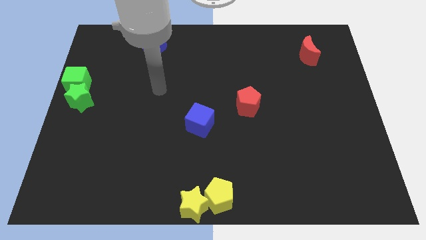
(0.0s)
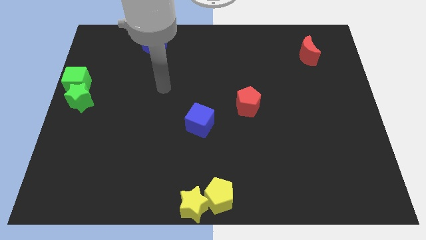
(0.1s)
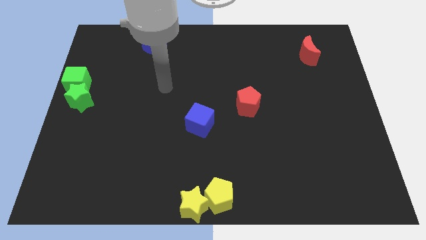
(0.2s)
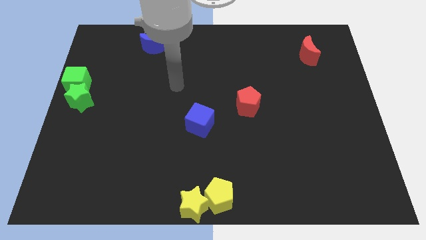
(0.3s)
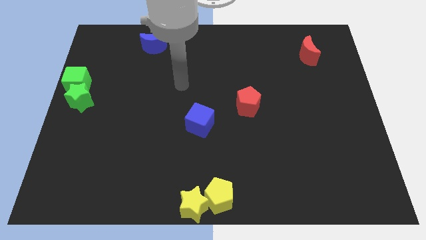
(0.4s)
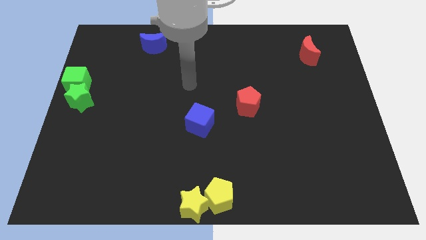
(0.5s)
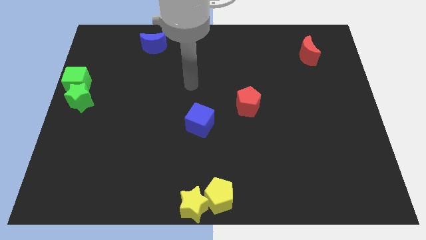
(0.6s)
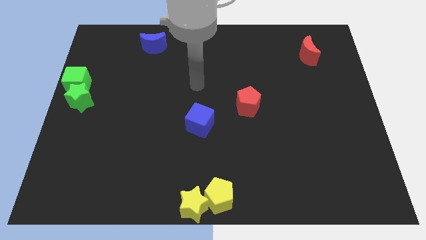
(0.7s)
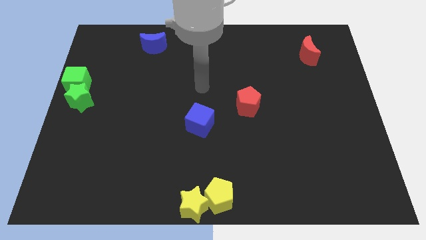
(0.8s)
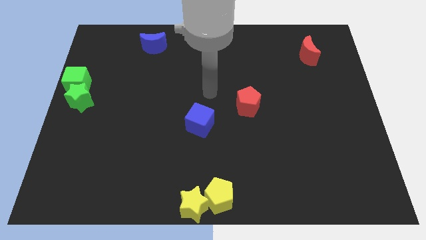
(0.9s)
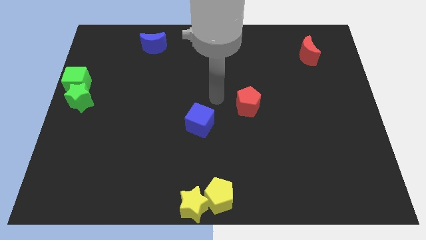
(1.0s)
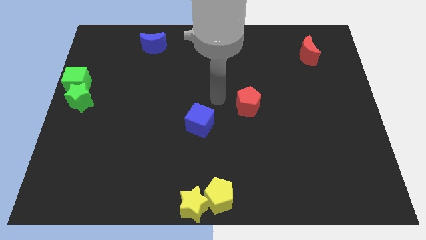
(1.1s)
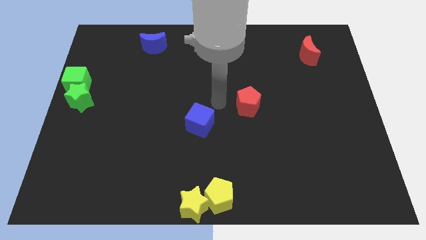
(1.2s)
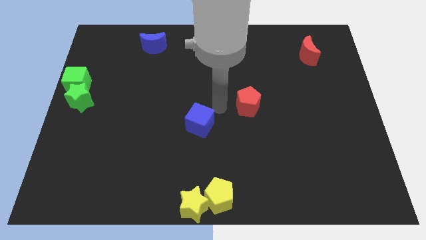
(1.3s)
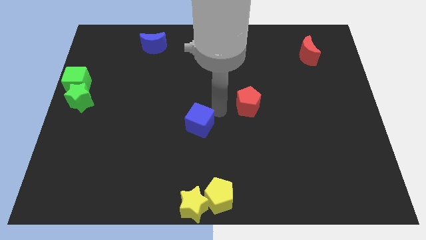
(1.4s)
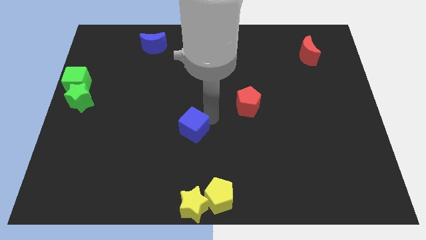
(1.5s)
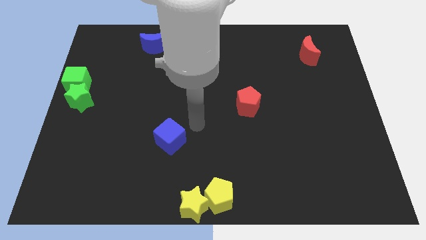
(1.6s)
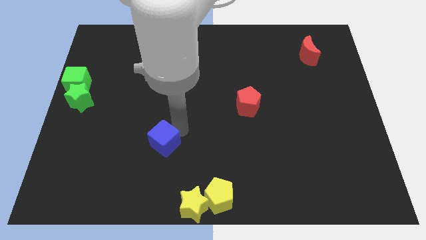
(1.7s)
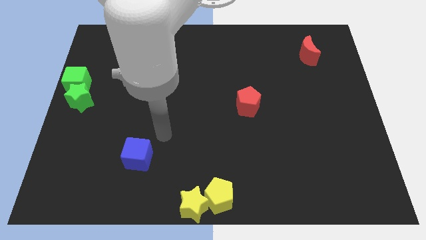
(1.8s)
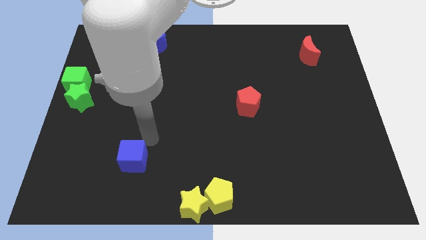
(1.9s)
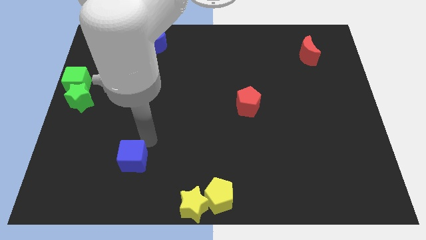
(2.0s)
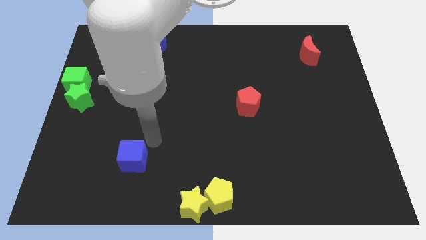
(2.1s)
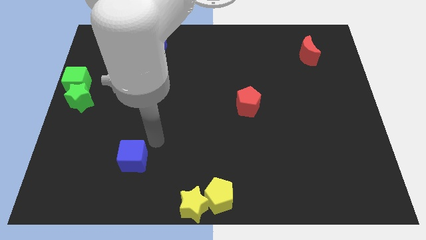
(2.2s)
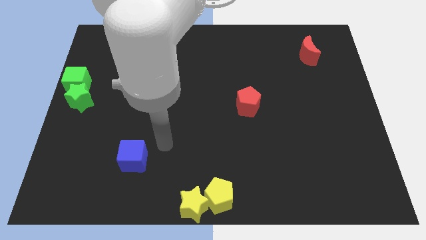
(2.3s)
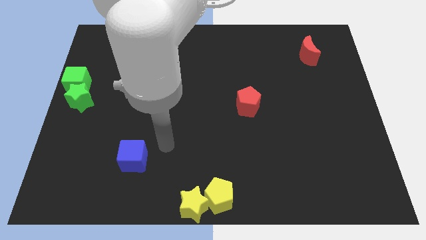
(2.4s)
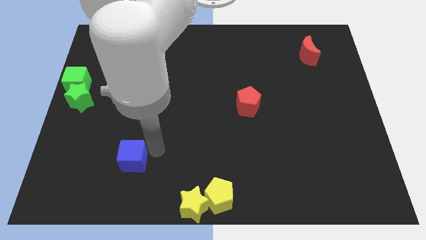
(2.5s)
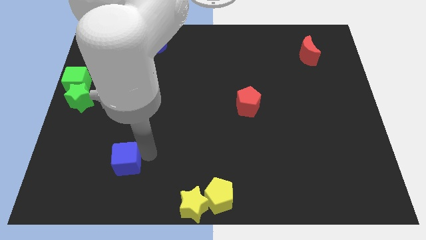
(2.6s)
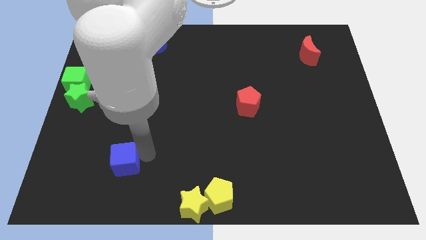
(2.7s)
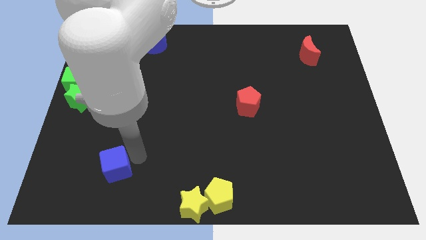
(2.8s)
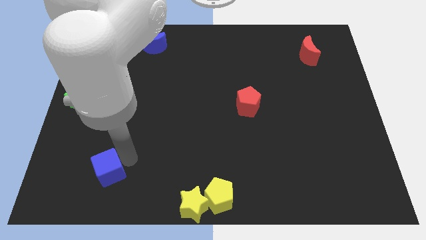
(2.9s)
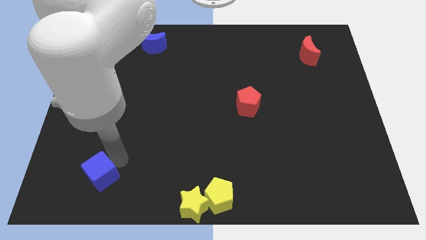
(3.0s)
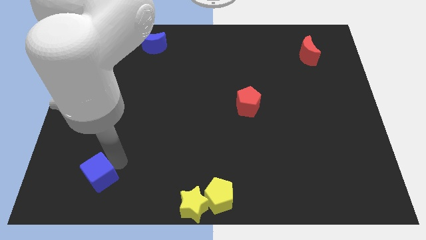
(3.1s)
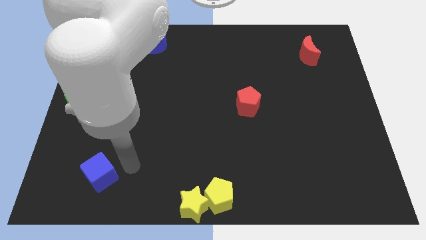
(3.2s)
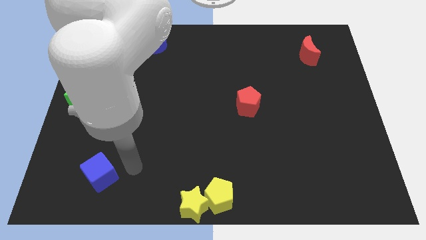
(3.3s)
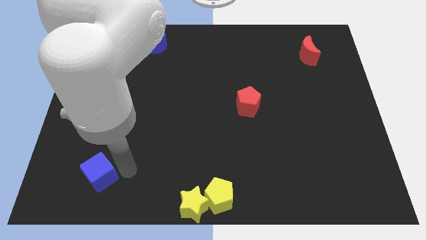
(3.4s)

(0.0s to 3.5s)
push the blue cube towards the bottom left

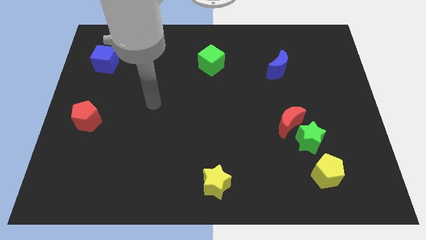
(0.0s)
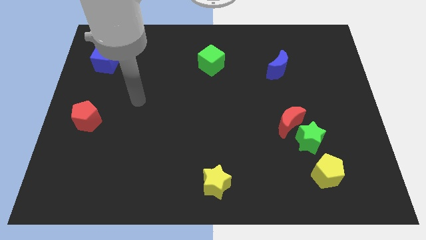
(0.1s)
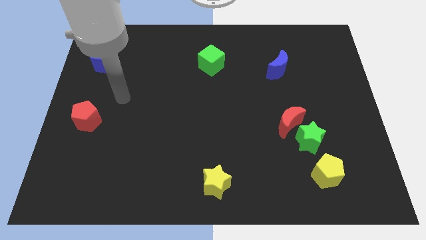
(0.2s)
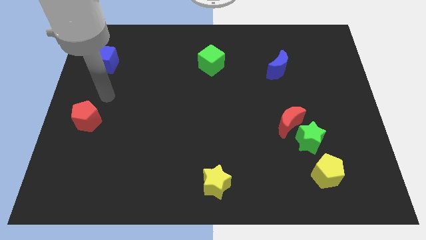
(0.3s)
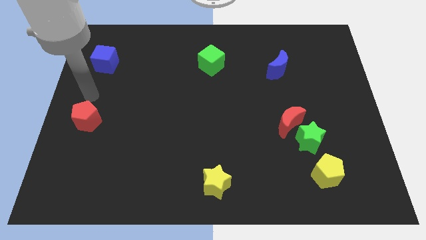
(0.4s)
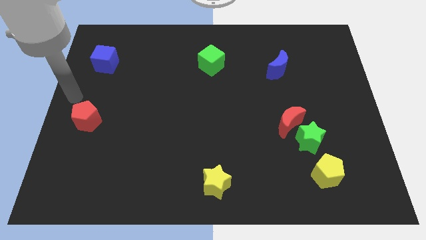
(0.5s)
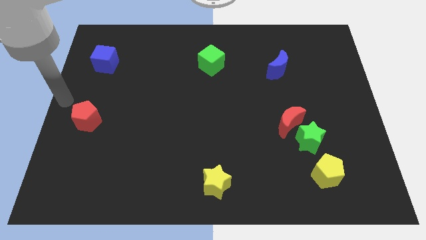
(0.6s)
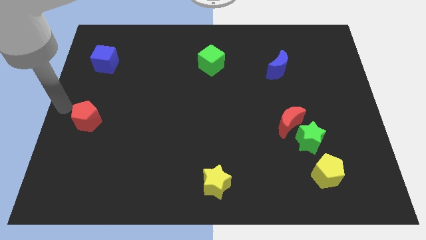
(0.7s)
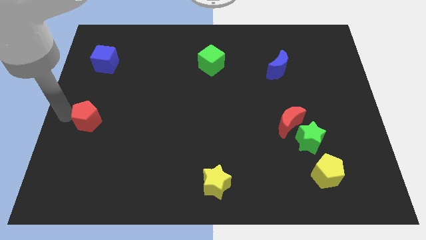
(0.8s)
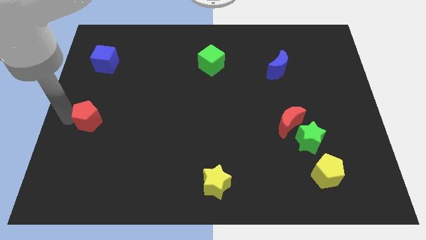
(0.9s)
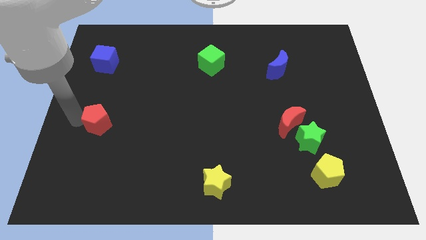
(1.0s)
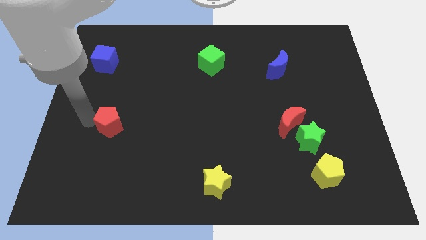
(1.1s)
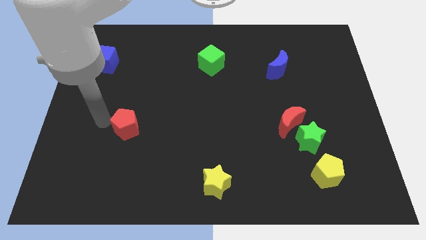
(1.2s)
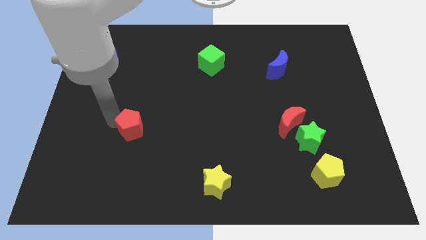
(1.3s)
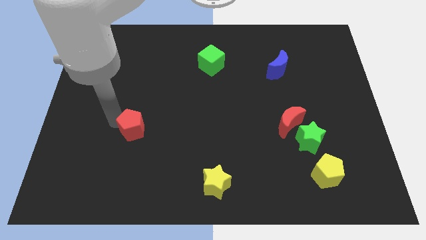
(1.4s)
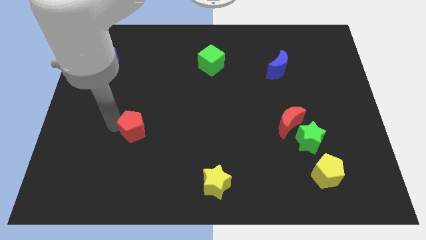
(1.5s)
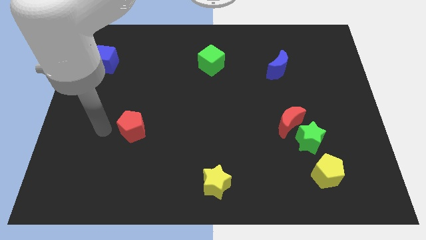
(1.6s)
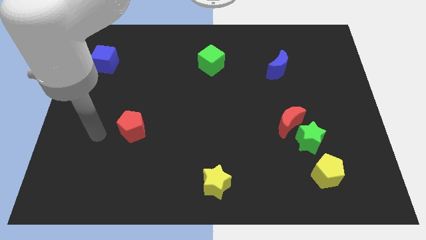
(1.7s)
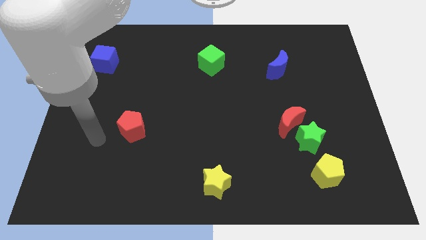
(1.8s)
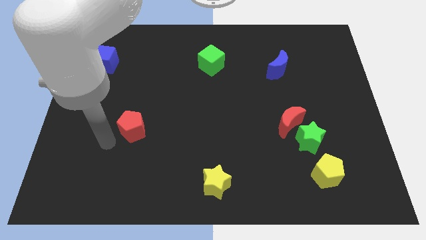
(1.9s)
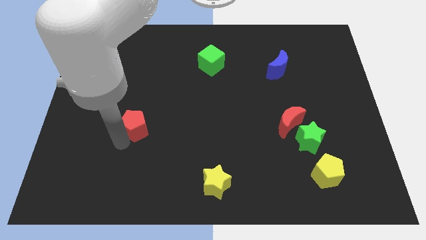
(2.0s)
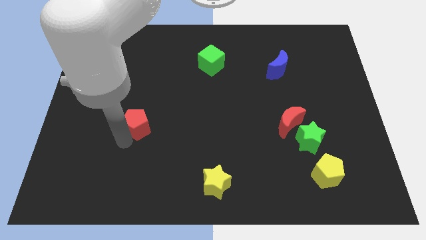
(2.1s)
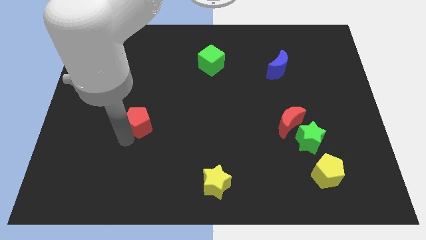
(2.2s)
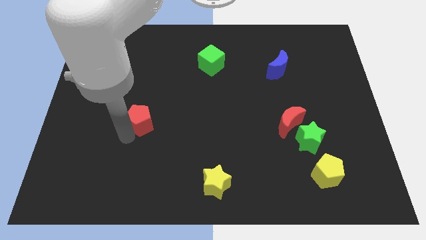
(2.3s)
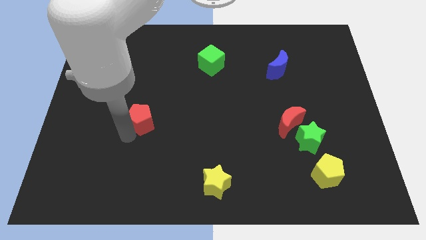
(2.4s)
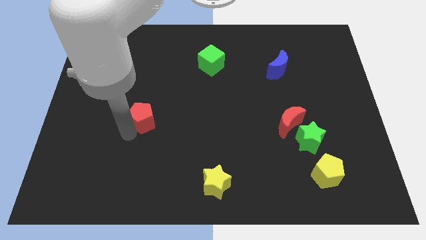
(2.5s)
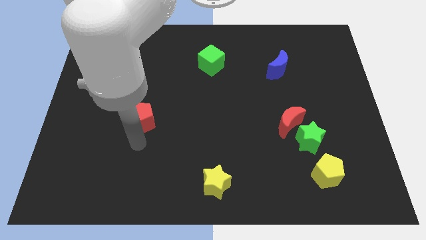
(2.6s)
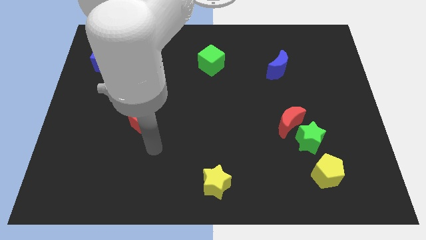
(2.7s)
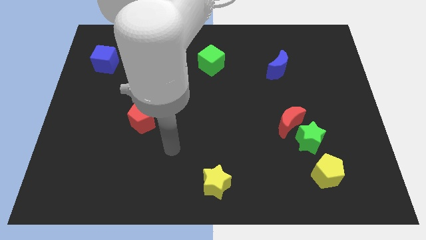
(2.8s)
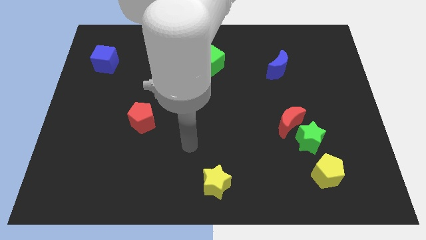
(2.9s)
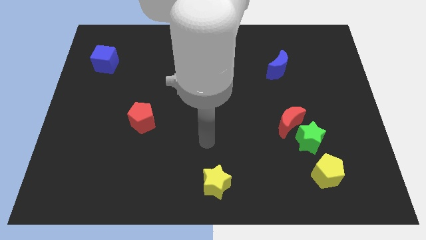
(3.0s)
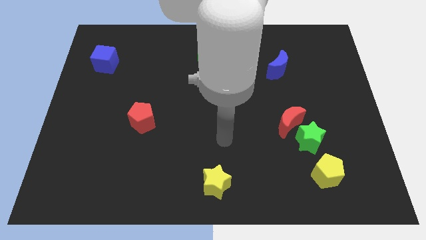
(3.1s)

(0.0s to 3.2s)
place the red pentagon diagonally in between the blue cube and the yellow star

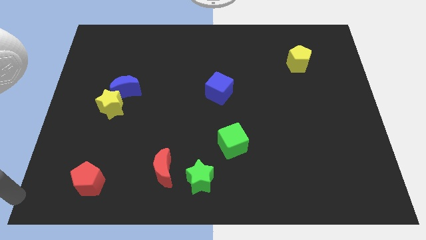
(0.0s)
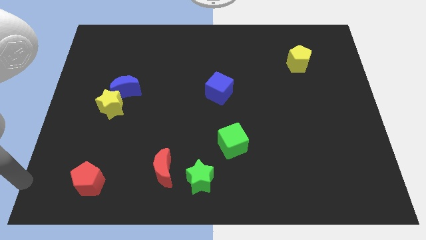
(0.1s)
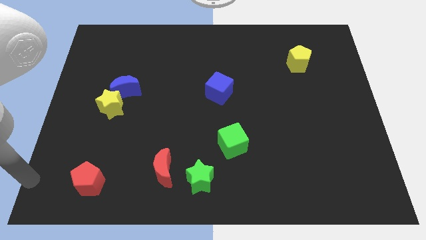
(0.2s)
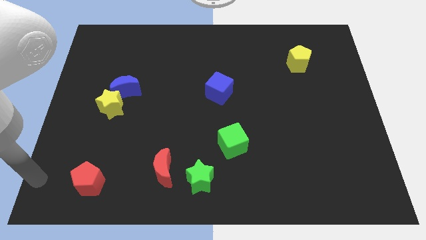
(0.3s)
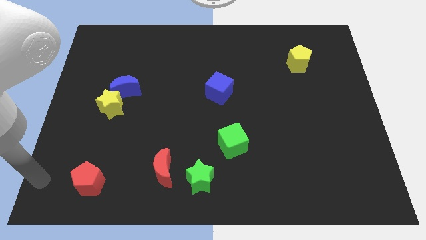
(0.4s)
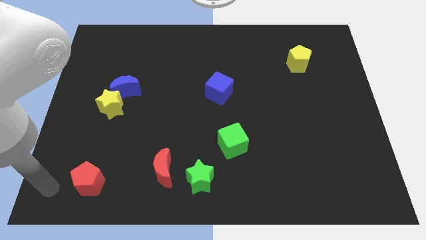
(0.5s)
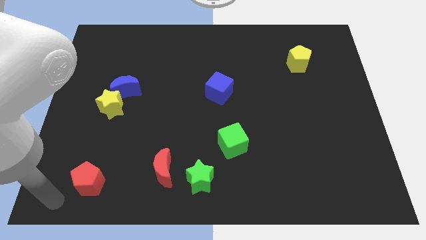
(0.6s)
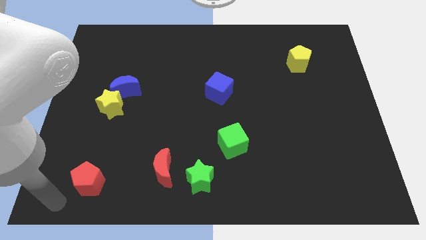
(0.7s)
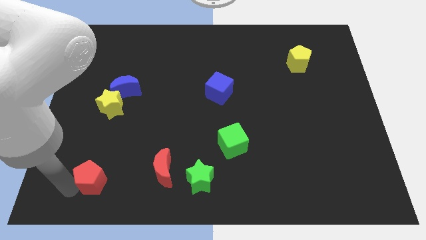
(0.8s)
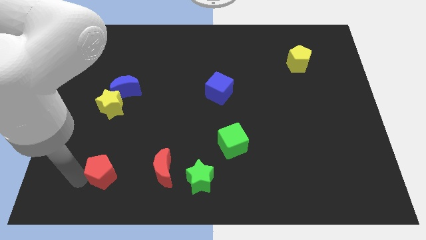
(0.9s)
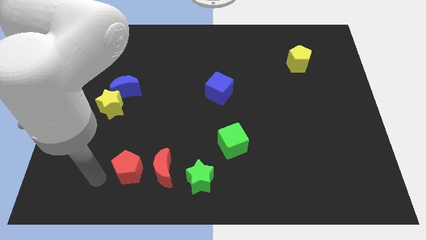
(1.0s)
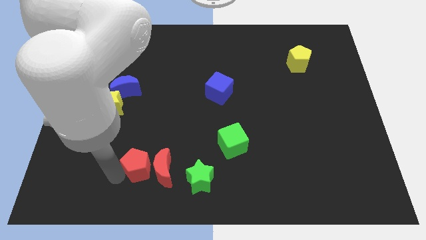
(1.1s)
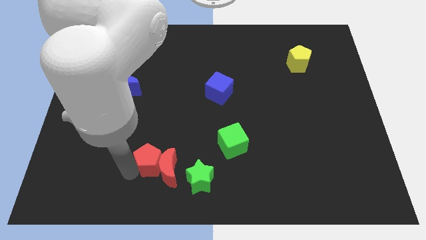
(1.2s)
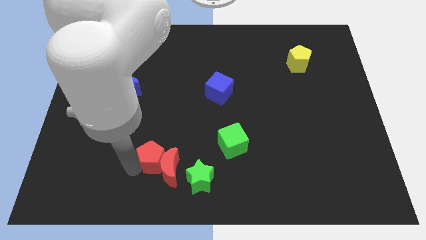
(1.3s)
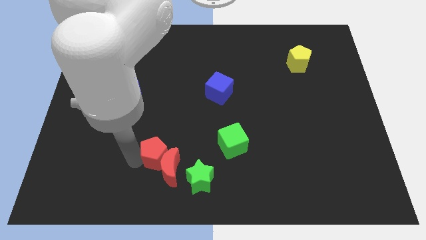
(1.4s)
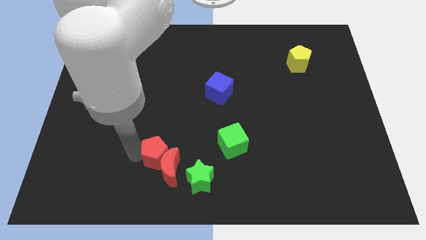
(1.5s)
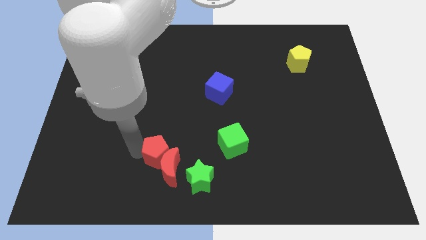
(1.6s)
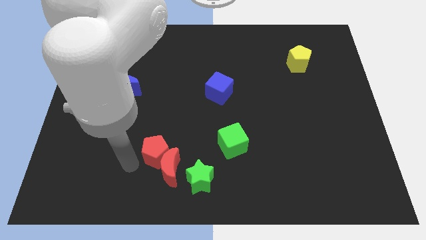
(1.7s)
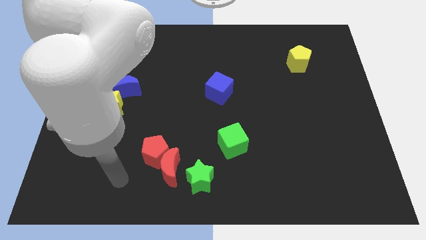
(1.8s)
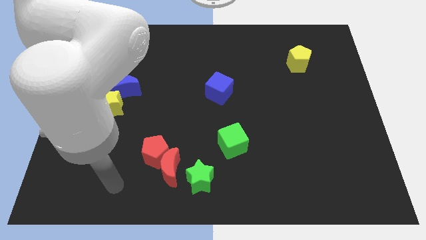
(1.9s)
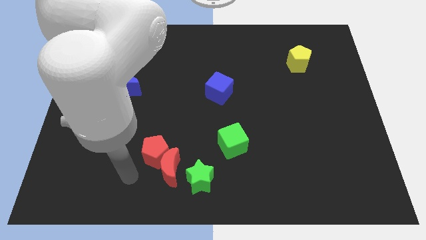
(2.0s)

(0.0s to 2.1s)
slide red pentagon into red moon
